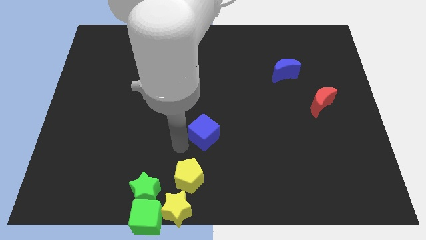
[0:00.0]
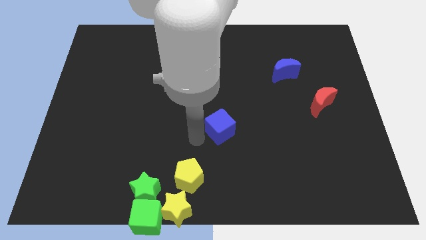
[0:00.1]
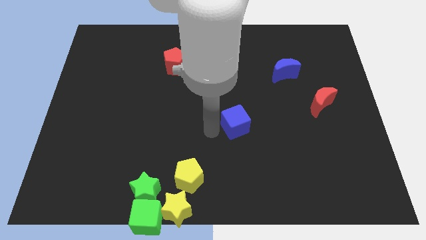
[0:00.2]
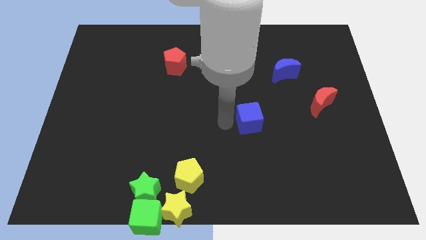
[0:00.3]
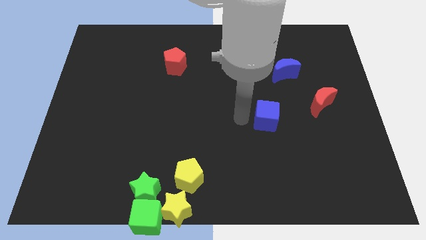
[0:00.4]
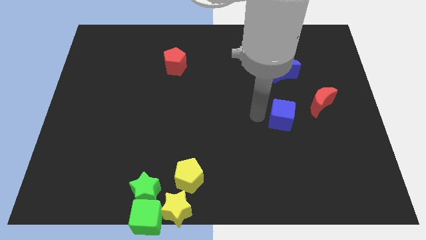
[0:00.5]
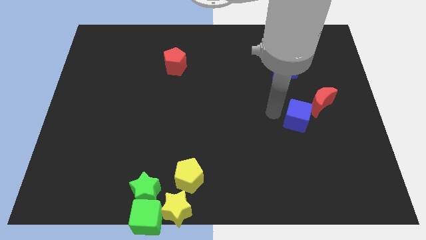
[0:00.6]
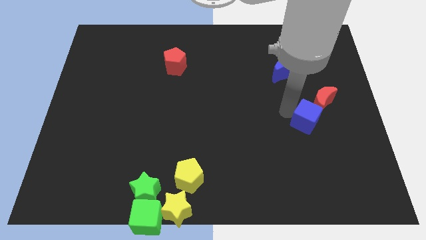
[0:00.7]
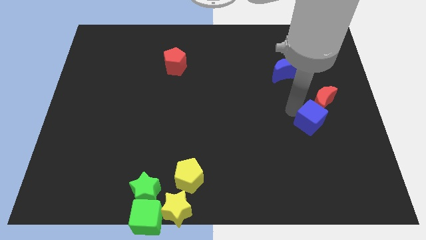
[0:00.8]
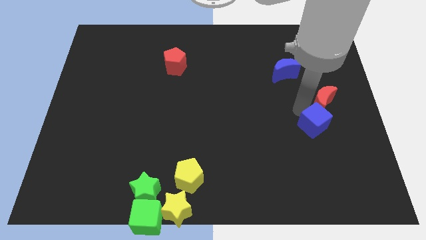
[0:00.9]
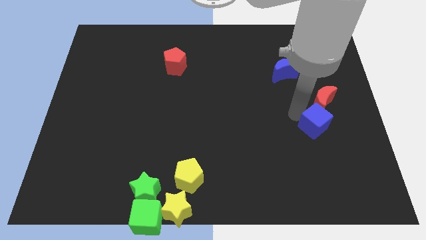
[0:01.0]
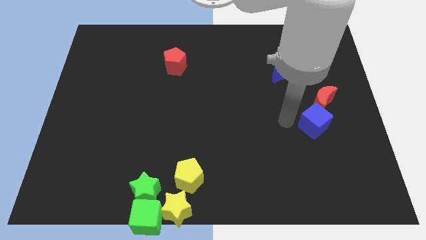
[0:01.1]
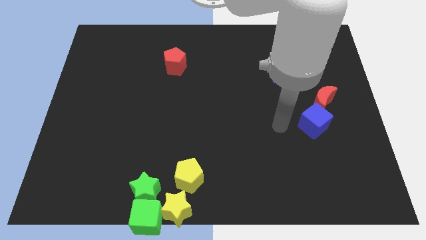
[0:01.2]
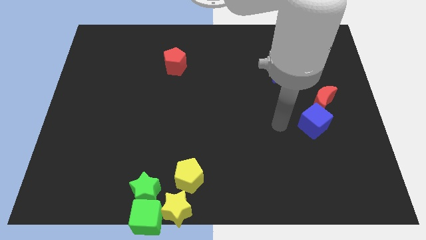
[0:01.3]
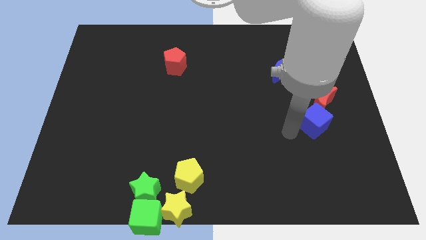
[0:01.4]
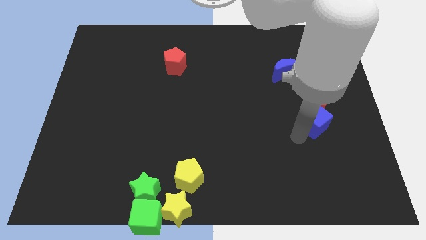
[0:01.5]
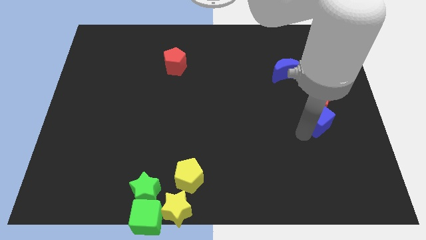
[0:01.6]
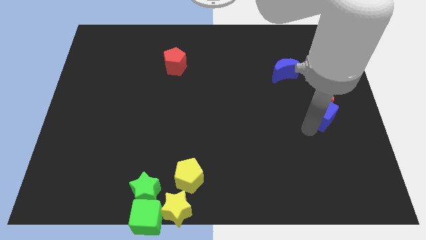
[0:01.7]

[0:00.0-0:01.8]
push the blue cube into the red crescent from the bottom

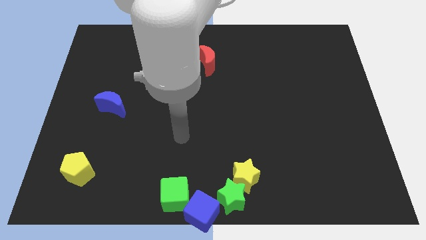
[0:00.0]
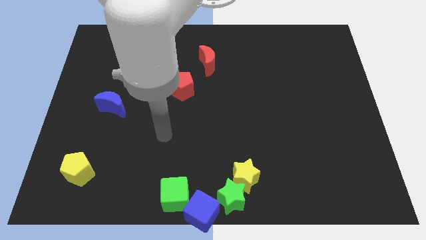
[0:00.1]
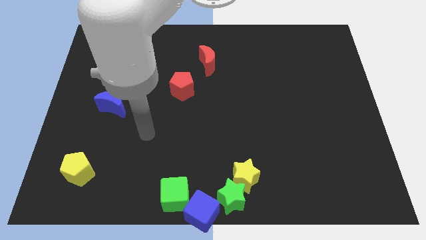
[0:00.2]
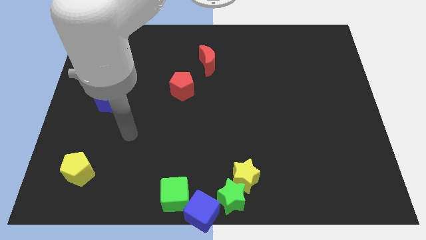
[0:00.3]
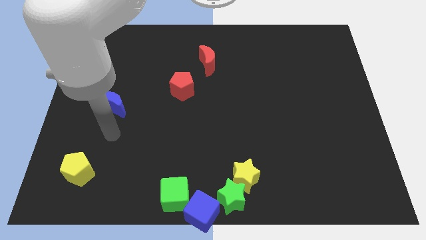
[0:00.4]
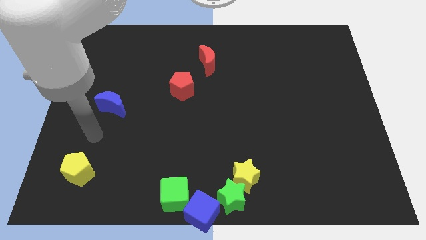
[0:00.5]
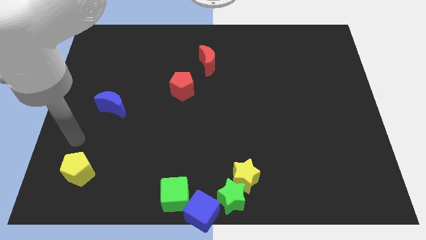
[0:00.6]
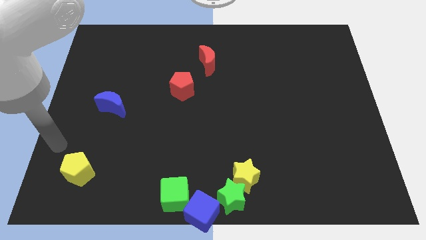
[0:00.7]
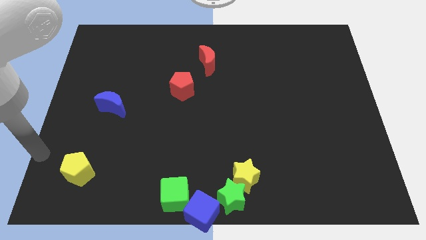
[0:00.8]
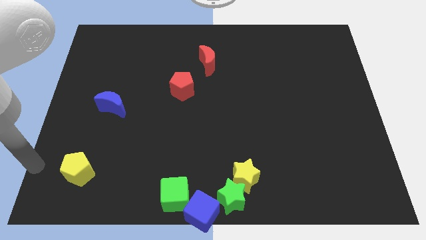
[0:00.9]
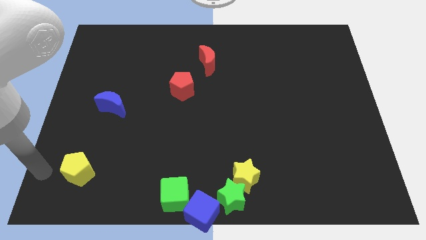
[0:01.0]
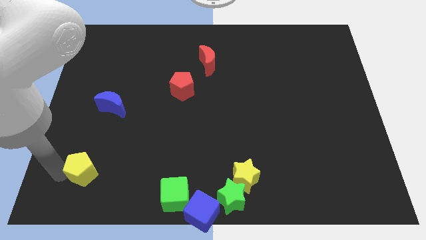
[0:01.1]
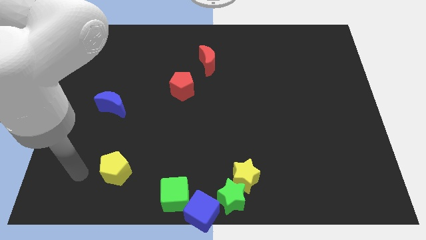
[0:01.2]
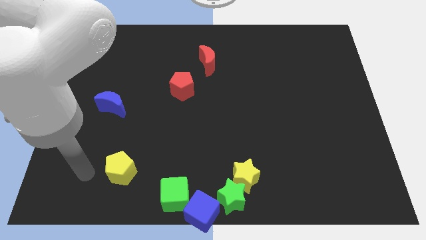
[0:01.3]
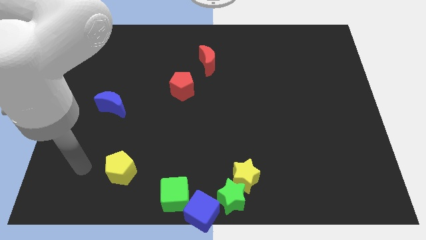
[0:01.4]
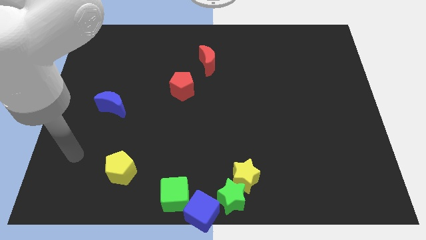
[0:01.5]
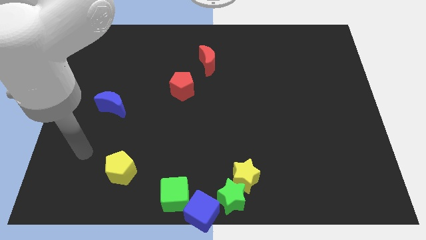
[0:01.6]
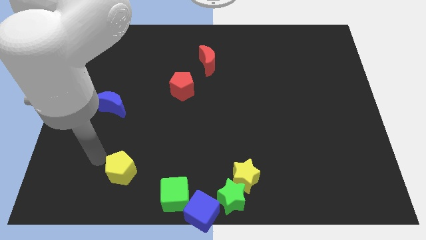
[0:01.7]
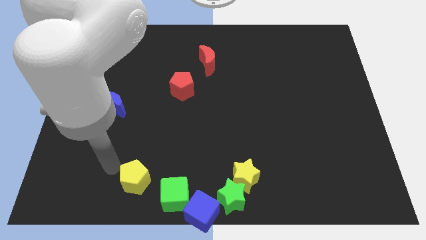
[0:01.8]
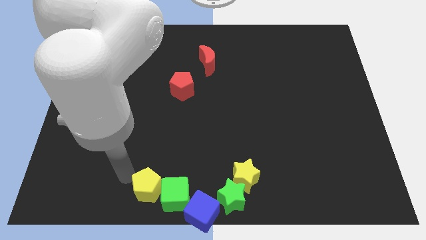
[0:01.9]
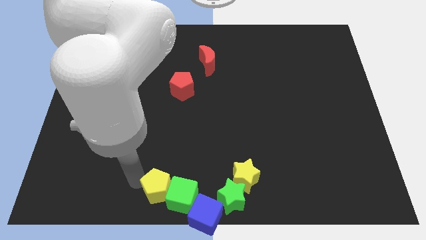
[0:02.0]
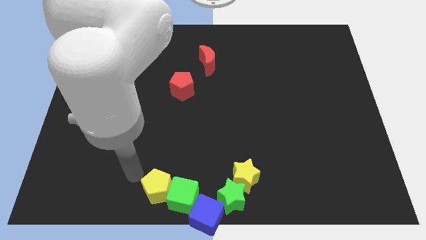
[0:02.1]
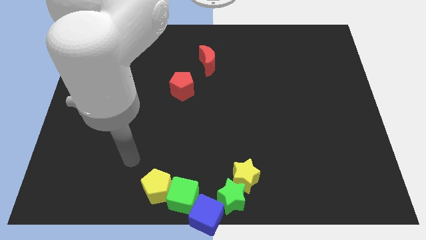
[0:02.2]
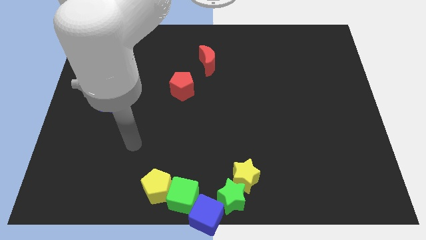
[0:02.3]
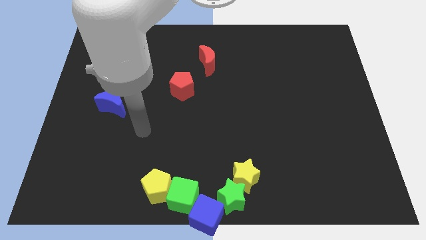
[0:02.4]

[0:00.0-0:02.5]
push the yellow pentagon into green cube

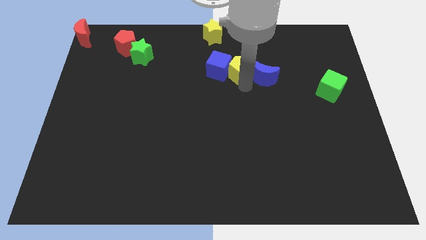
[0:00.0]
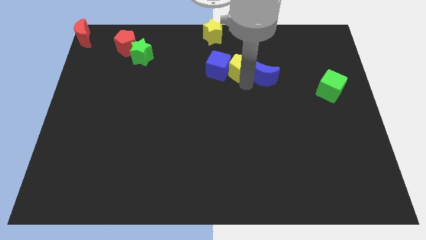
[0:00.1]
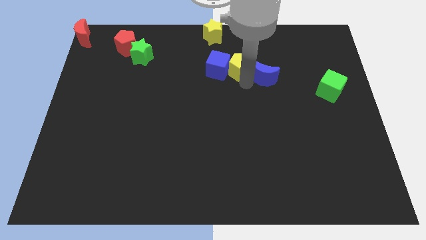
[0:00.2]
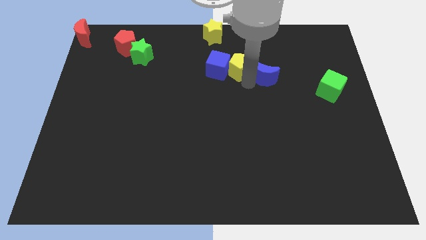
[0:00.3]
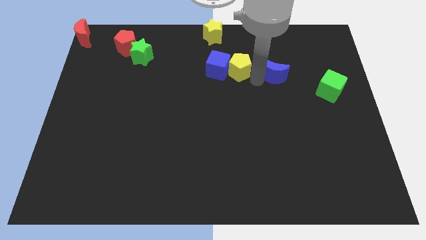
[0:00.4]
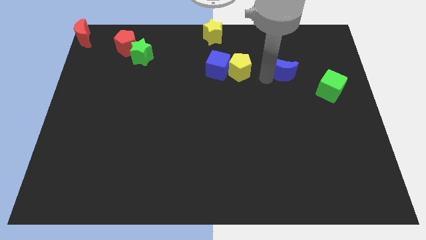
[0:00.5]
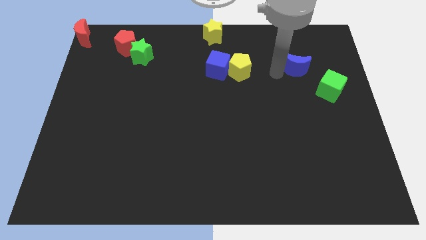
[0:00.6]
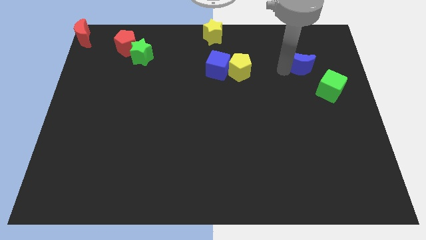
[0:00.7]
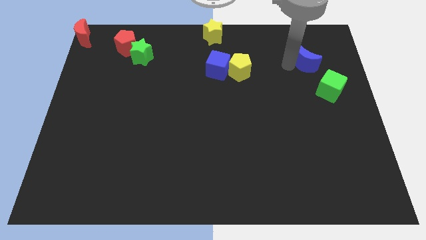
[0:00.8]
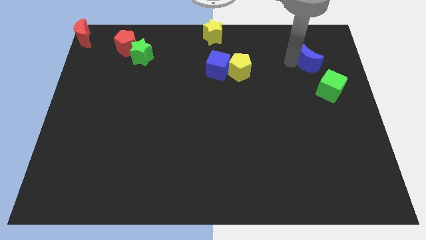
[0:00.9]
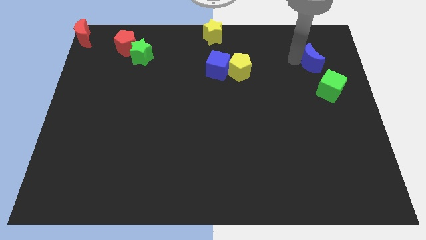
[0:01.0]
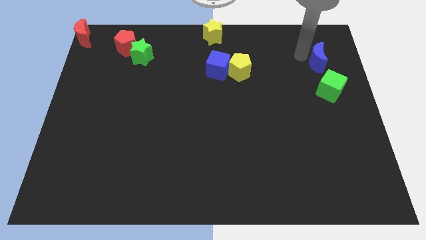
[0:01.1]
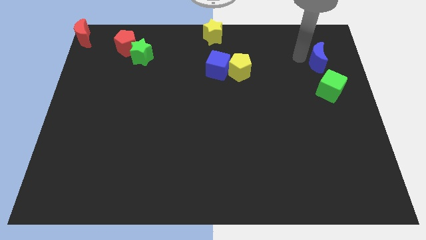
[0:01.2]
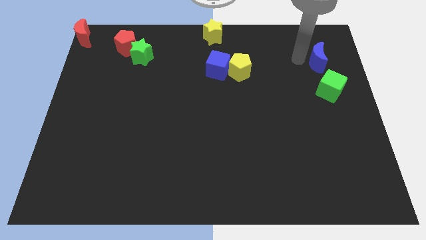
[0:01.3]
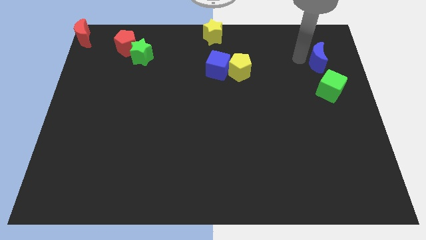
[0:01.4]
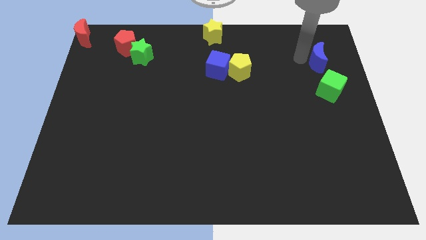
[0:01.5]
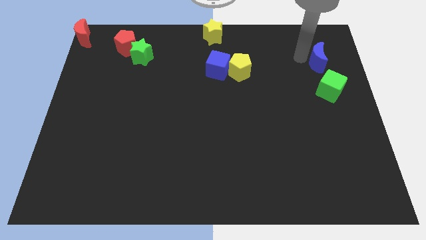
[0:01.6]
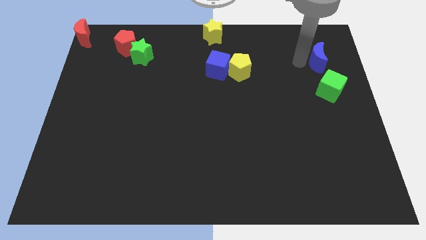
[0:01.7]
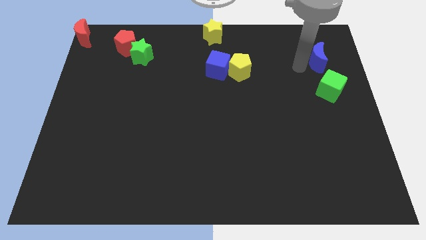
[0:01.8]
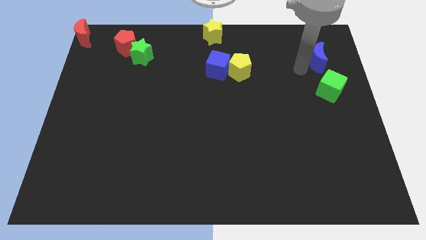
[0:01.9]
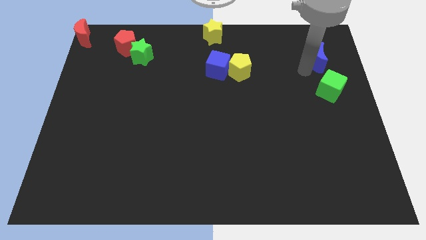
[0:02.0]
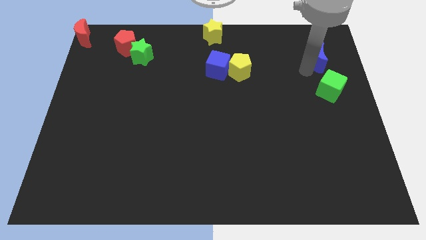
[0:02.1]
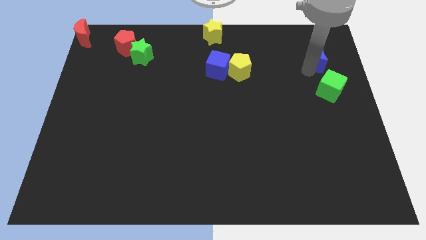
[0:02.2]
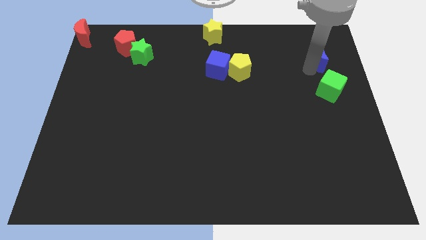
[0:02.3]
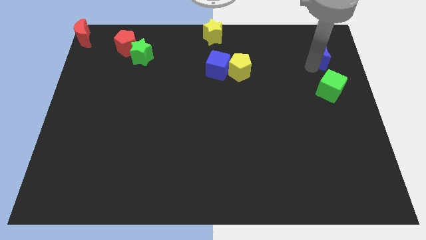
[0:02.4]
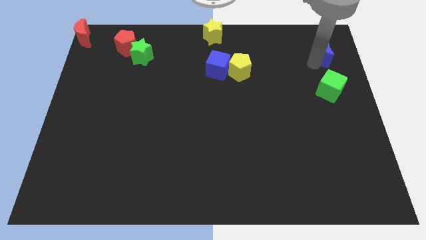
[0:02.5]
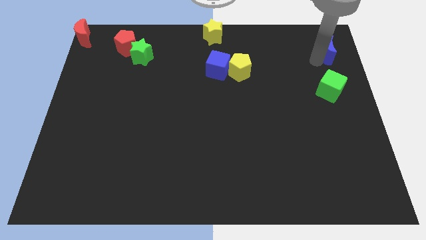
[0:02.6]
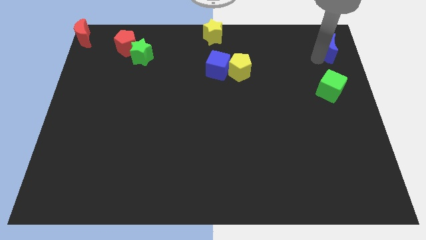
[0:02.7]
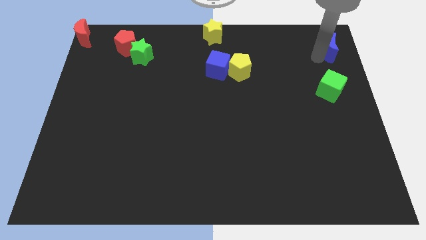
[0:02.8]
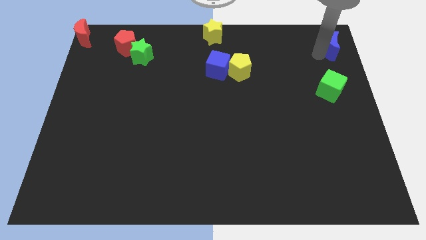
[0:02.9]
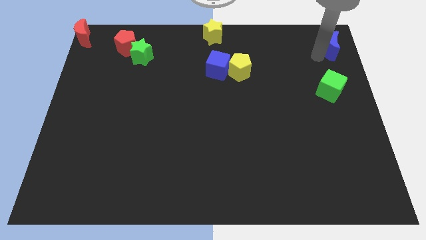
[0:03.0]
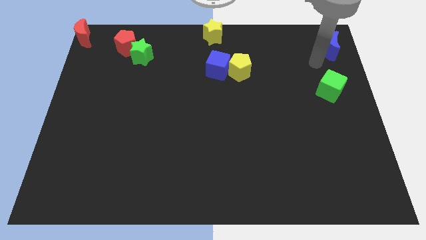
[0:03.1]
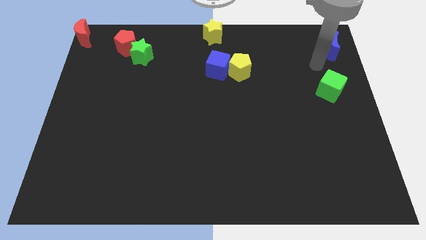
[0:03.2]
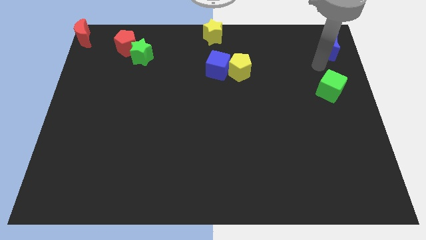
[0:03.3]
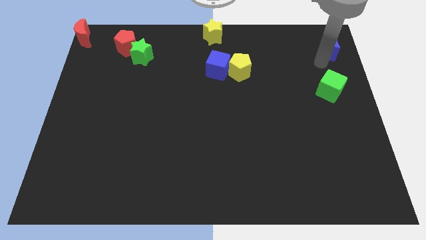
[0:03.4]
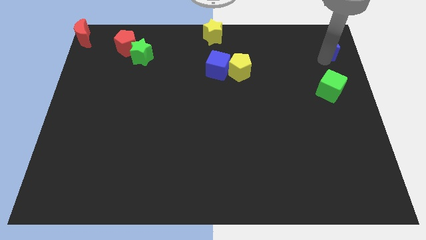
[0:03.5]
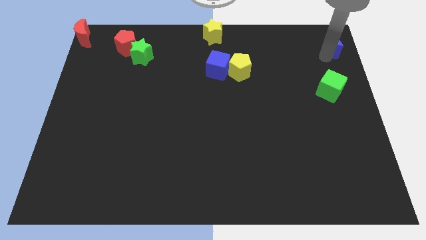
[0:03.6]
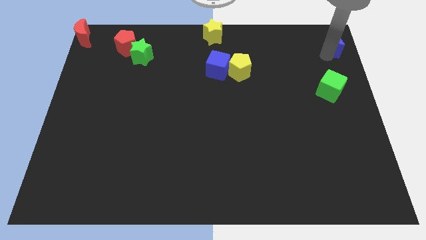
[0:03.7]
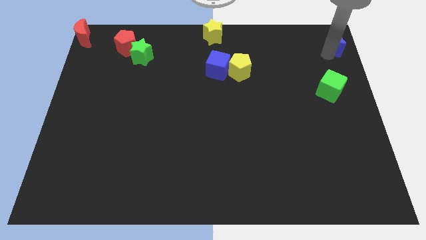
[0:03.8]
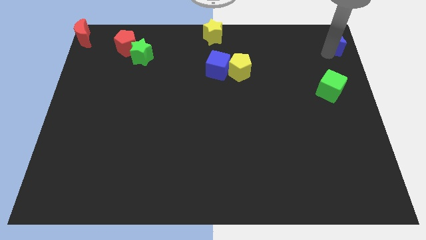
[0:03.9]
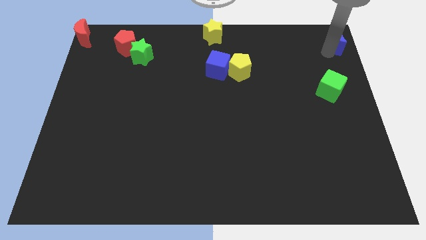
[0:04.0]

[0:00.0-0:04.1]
separate blue moon from yellow pentagon

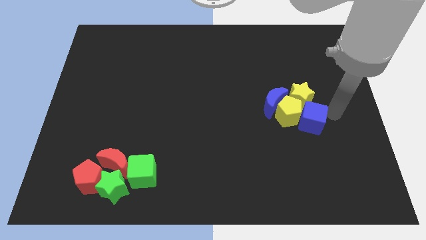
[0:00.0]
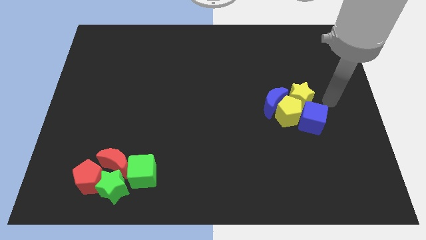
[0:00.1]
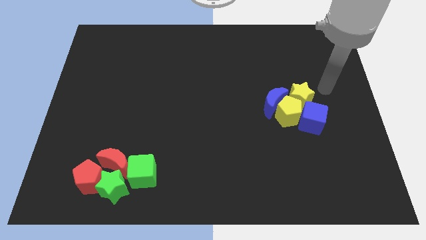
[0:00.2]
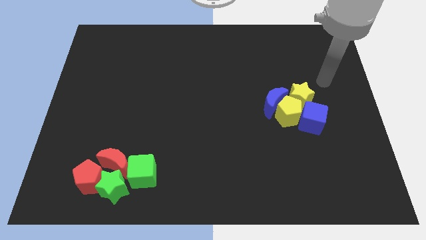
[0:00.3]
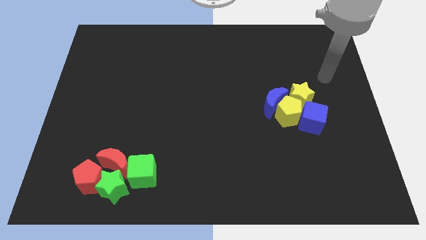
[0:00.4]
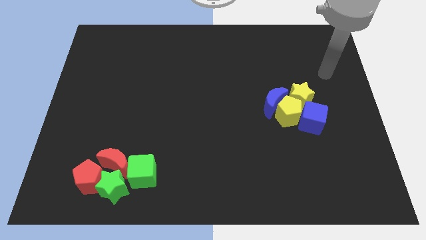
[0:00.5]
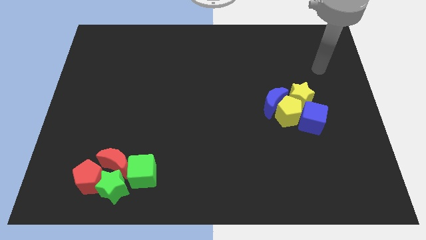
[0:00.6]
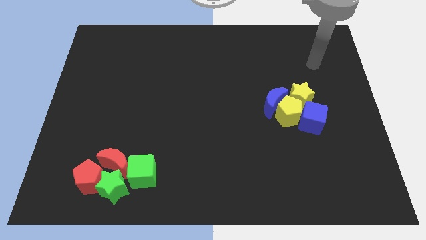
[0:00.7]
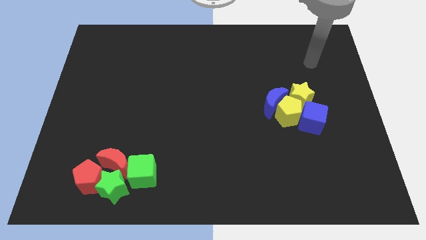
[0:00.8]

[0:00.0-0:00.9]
move your hand away from the blue cube
